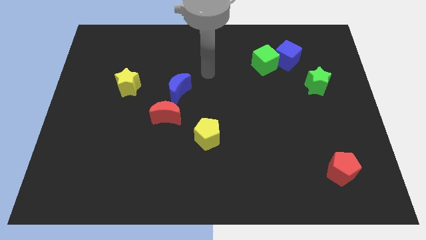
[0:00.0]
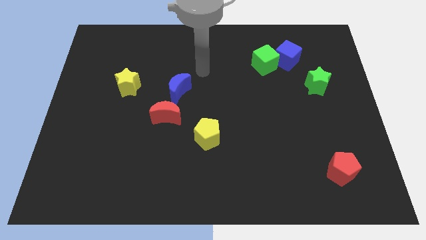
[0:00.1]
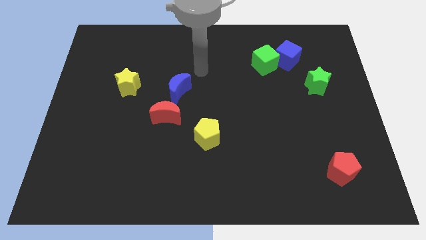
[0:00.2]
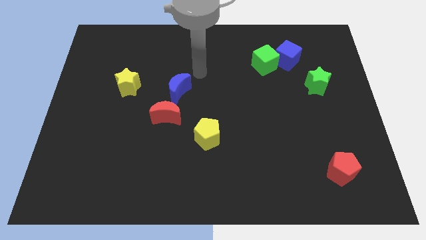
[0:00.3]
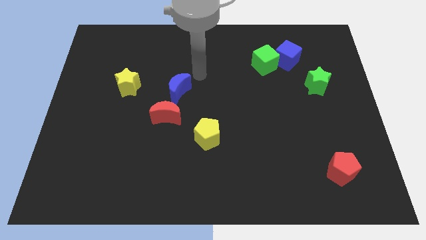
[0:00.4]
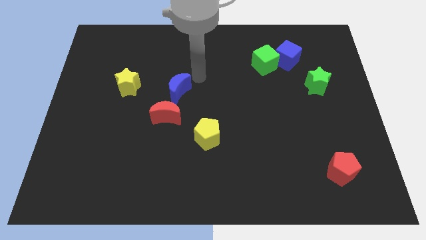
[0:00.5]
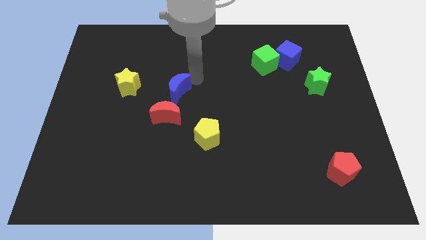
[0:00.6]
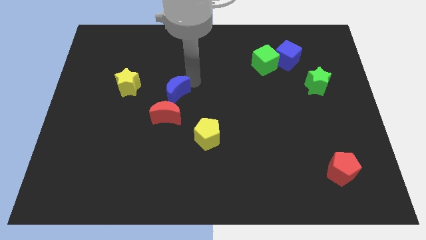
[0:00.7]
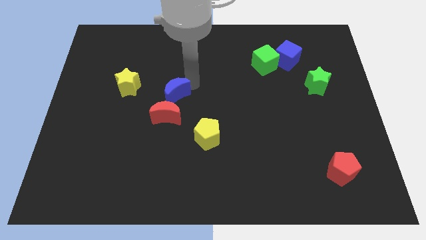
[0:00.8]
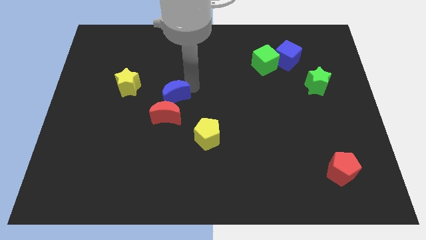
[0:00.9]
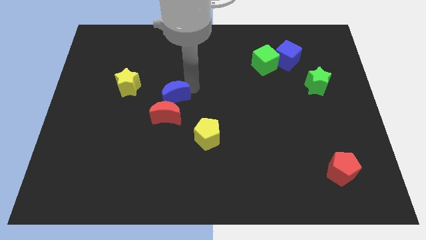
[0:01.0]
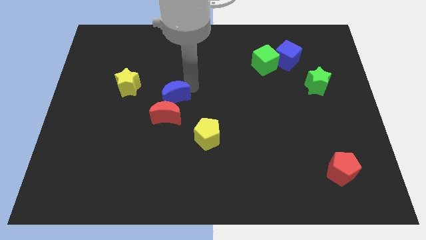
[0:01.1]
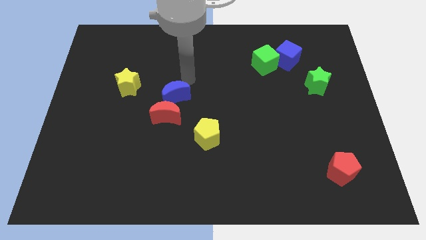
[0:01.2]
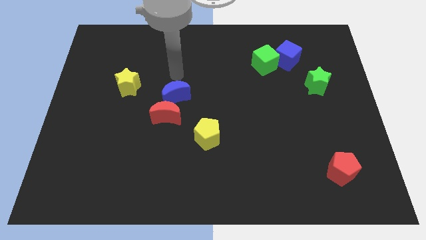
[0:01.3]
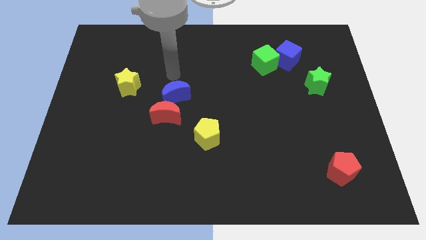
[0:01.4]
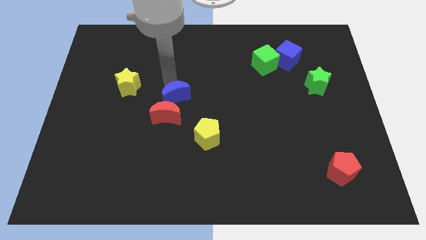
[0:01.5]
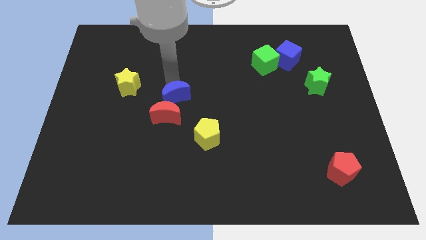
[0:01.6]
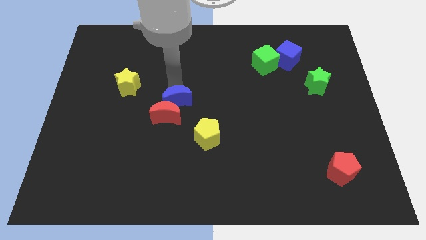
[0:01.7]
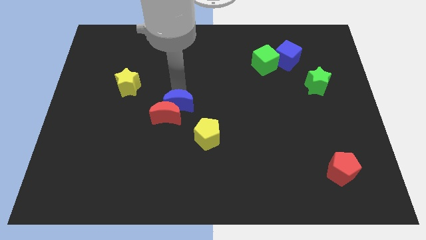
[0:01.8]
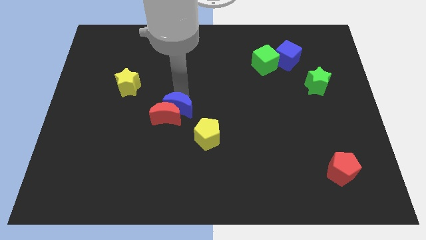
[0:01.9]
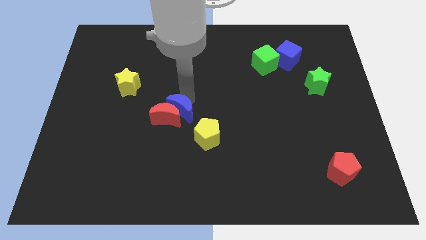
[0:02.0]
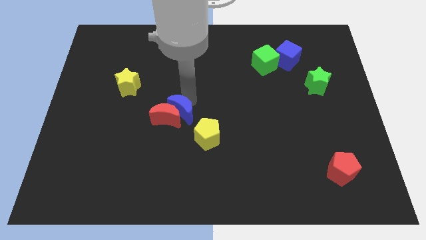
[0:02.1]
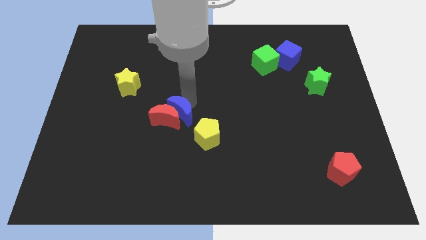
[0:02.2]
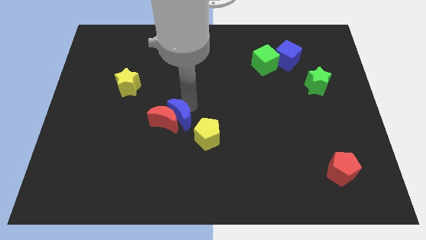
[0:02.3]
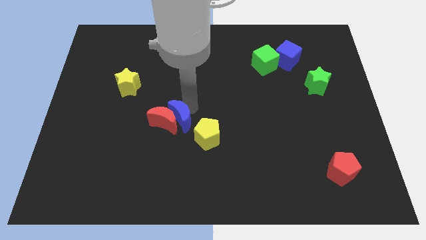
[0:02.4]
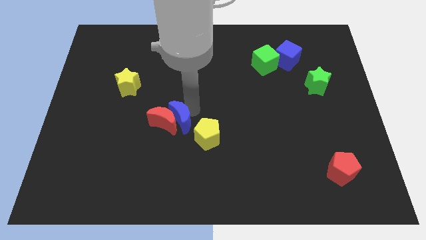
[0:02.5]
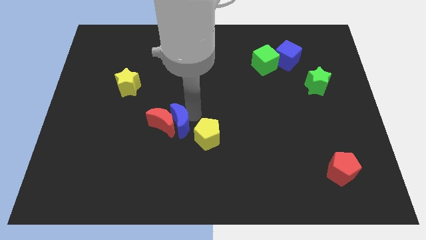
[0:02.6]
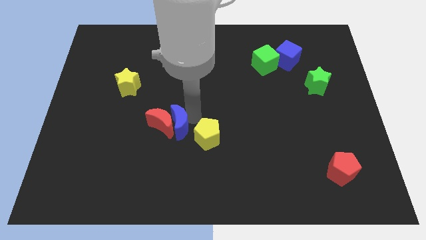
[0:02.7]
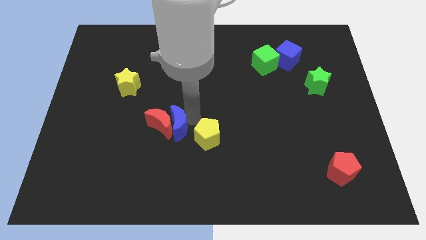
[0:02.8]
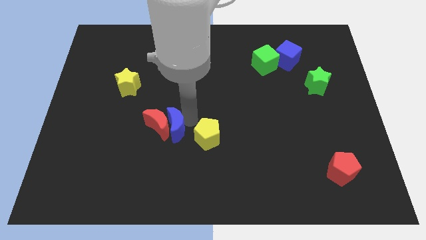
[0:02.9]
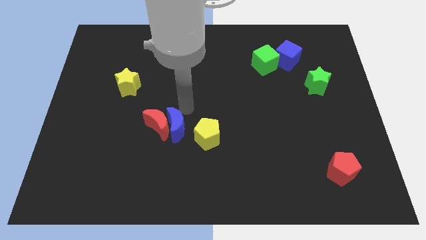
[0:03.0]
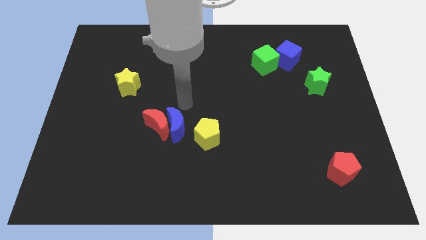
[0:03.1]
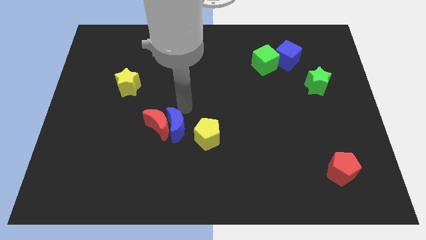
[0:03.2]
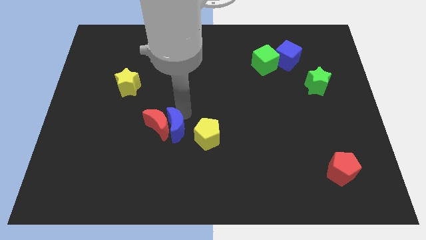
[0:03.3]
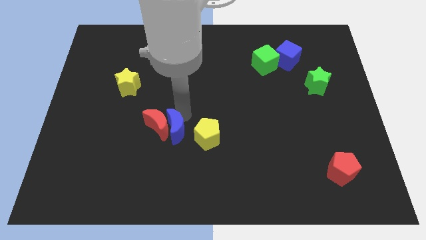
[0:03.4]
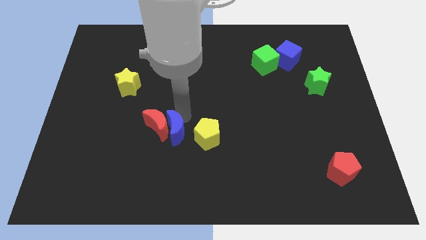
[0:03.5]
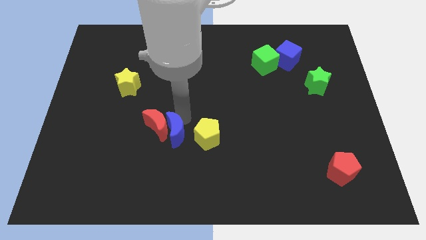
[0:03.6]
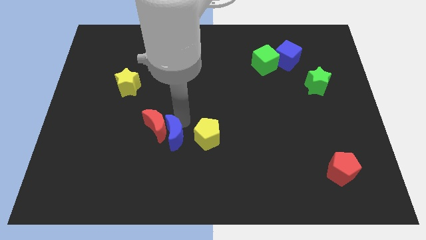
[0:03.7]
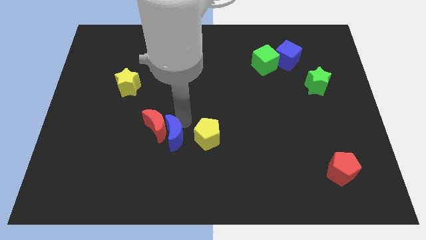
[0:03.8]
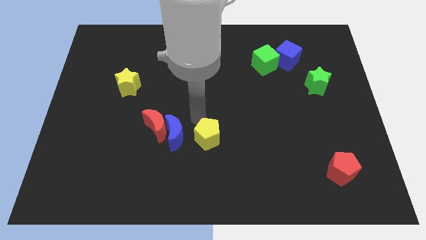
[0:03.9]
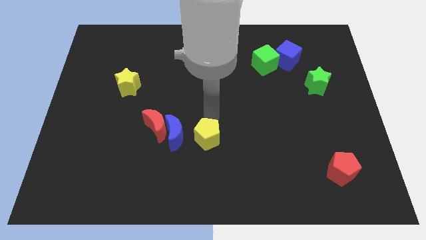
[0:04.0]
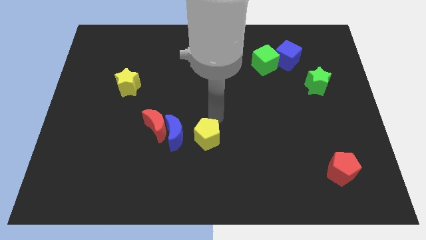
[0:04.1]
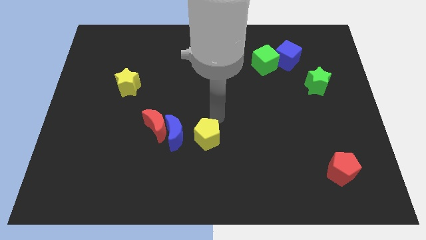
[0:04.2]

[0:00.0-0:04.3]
push the blue moon into the red moon

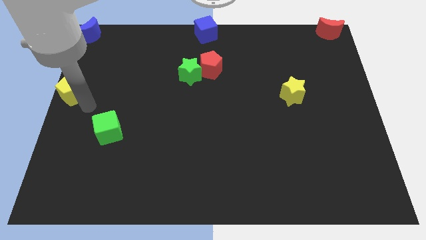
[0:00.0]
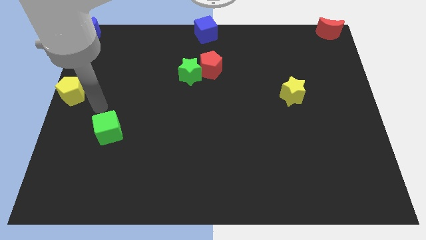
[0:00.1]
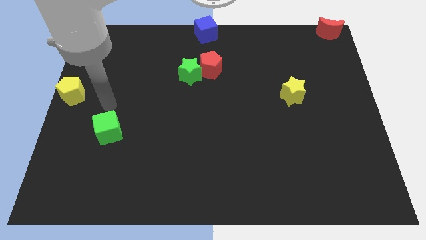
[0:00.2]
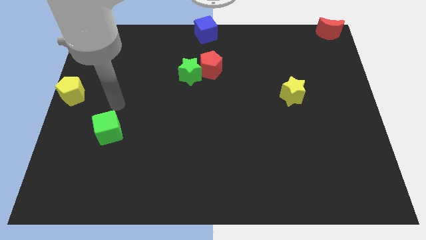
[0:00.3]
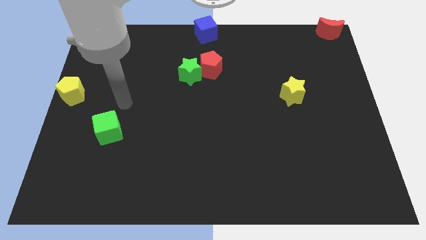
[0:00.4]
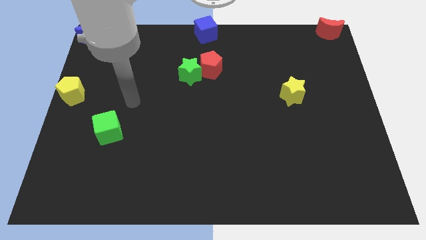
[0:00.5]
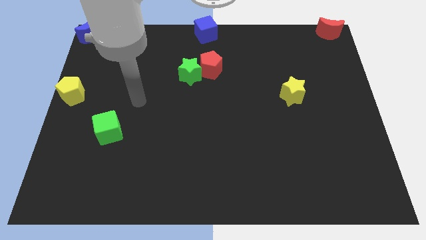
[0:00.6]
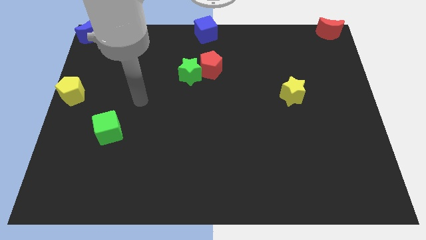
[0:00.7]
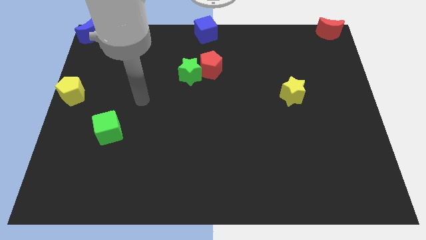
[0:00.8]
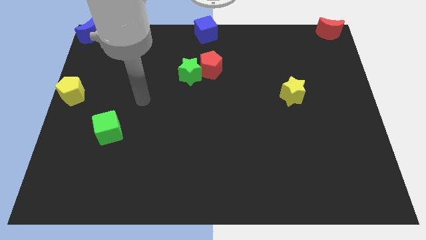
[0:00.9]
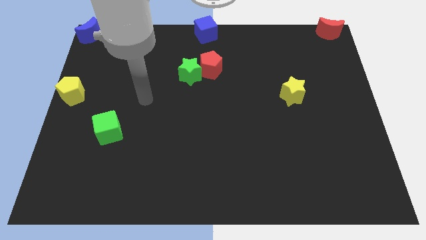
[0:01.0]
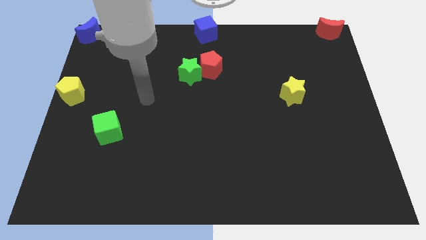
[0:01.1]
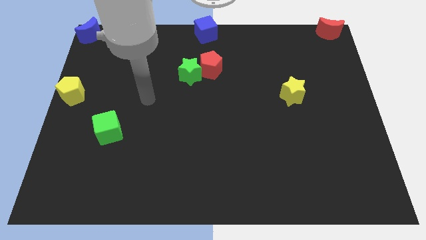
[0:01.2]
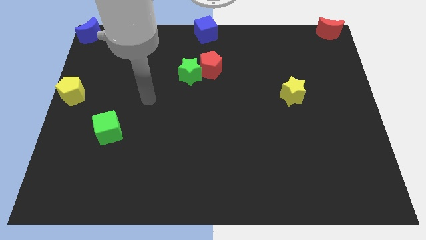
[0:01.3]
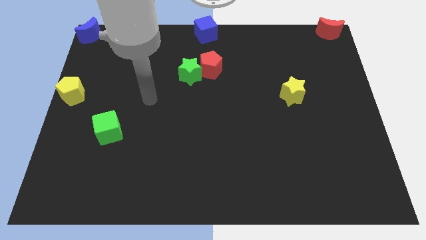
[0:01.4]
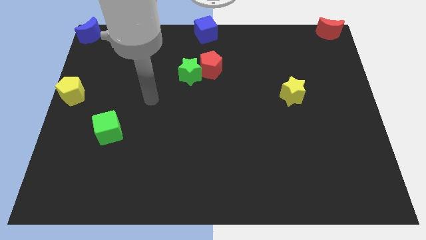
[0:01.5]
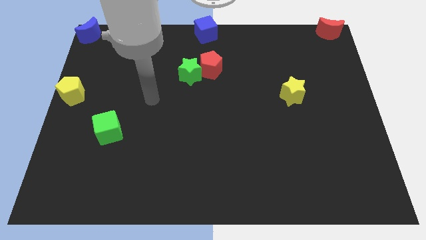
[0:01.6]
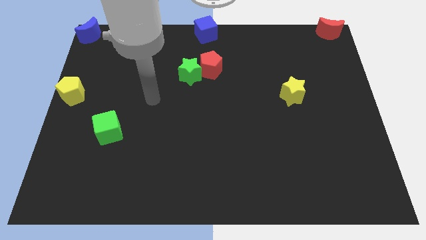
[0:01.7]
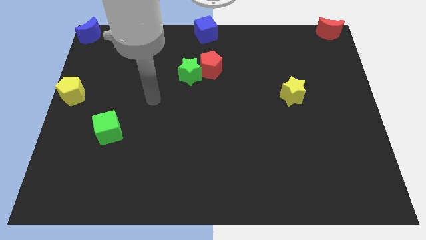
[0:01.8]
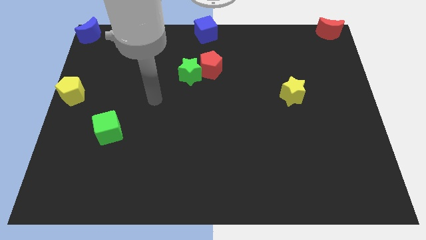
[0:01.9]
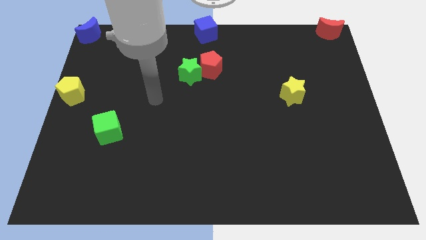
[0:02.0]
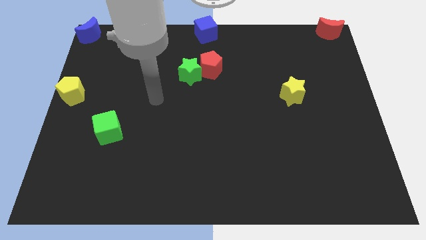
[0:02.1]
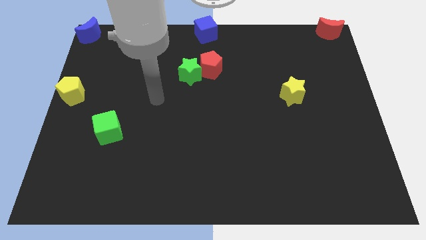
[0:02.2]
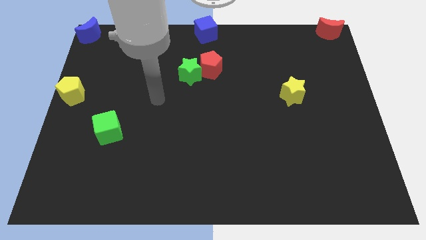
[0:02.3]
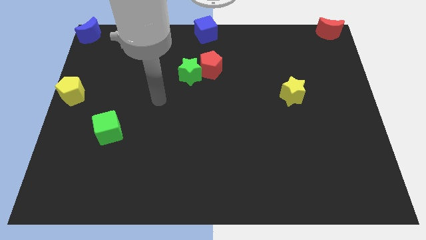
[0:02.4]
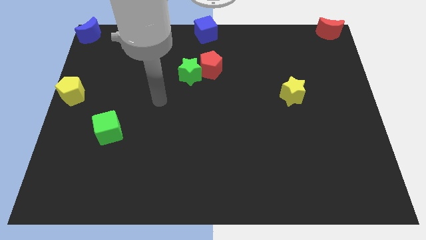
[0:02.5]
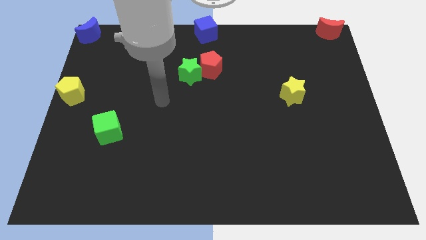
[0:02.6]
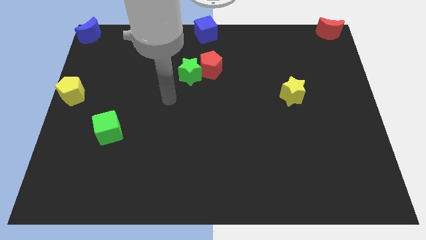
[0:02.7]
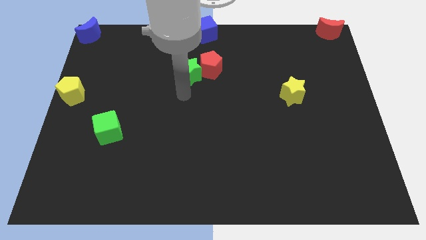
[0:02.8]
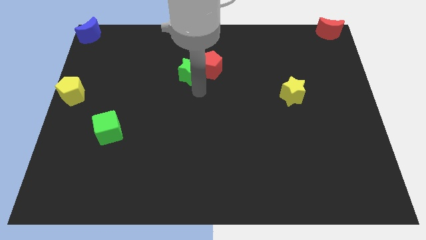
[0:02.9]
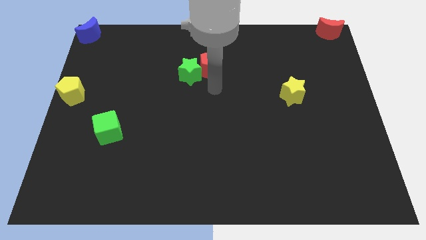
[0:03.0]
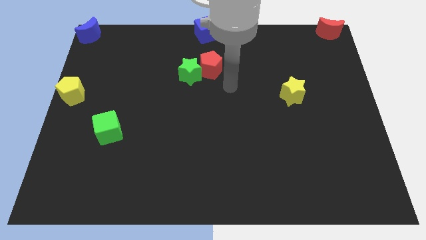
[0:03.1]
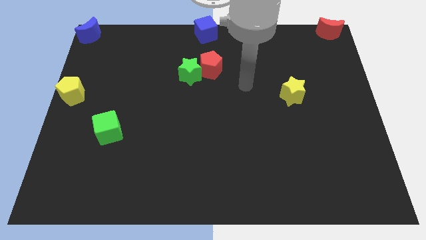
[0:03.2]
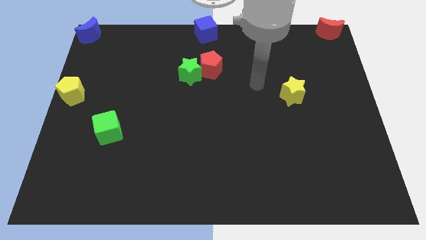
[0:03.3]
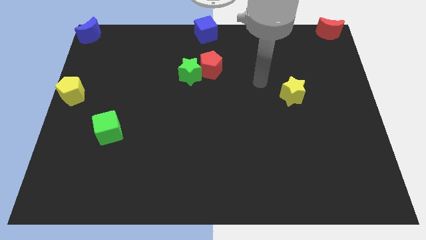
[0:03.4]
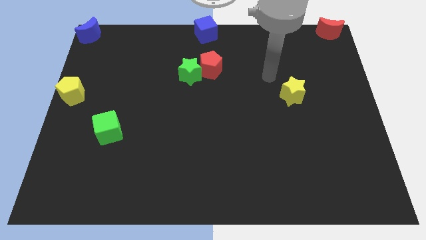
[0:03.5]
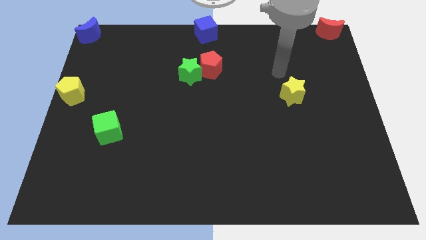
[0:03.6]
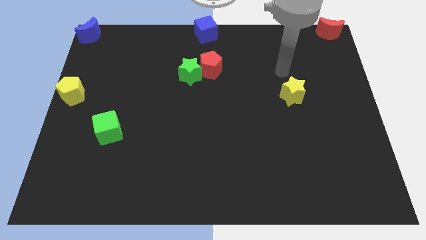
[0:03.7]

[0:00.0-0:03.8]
move your arm to the top of the yellow star

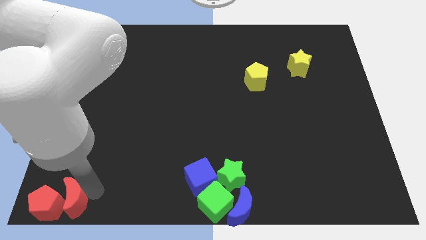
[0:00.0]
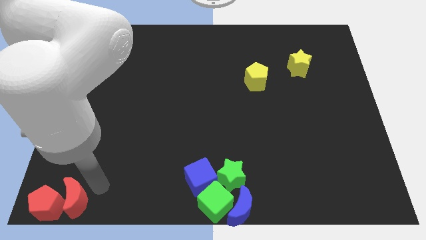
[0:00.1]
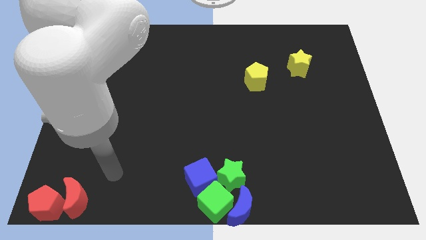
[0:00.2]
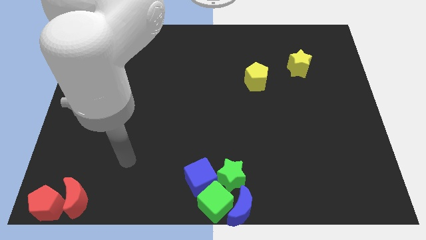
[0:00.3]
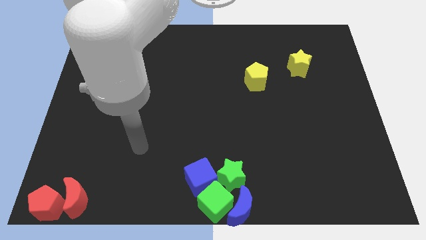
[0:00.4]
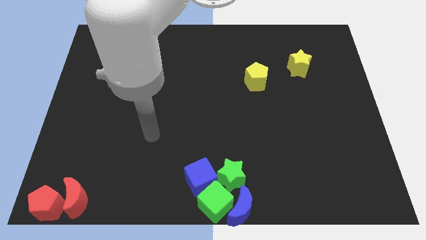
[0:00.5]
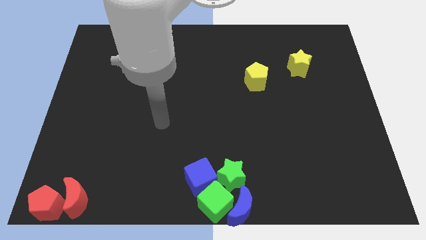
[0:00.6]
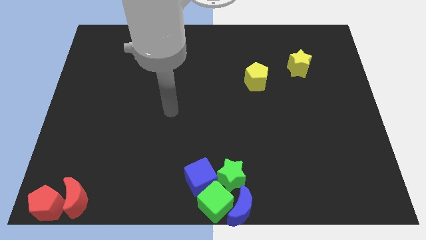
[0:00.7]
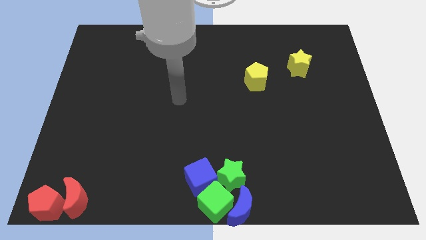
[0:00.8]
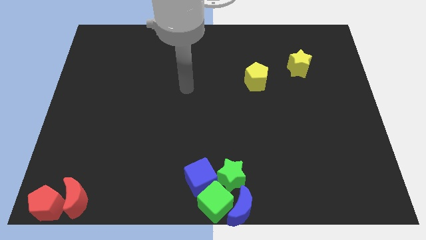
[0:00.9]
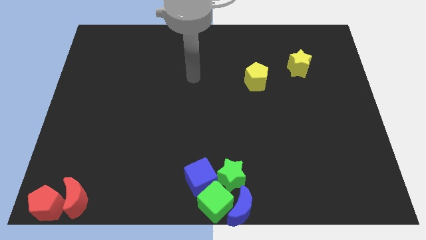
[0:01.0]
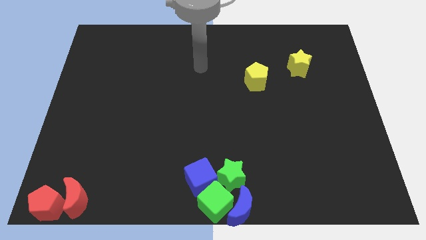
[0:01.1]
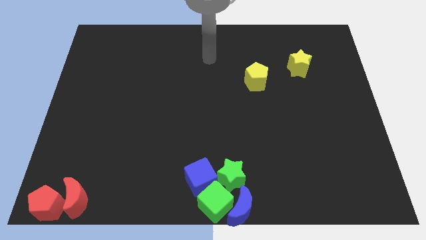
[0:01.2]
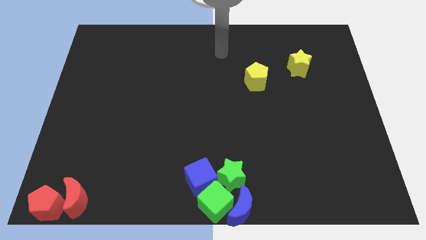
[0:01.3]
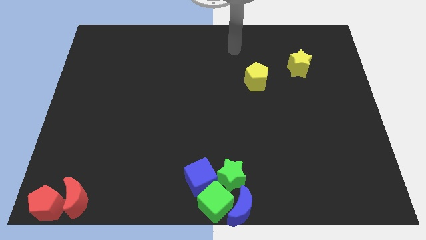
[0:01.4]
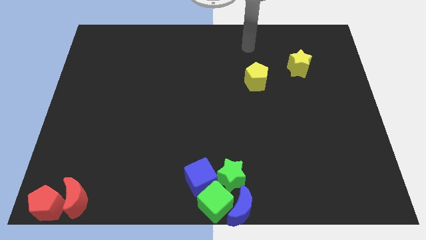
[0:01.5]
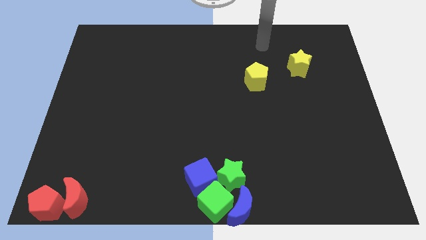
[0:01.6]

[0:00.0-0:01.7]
move your arm away from the red crescent
